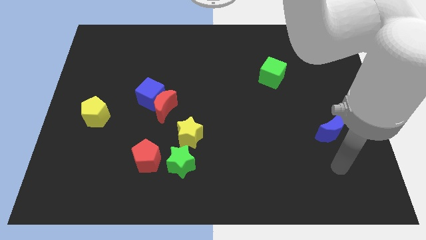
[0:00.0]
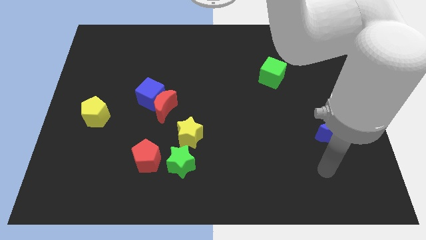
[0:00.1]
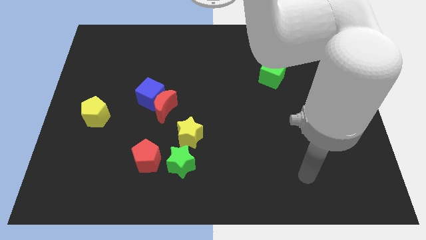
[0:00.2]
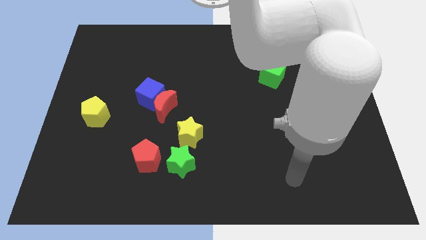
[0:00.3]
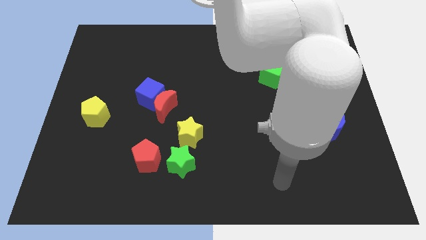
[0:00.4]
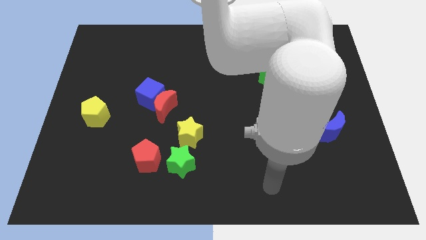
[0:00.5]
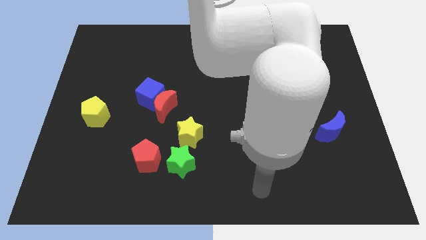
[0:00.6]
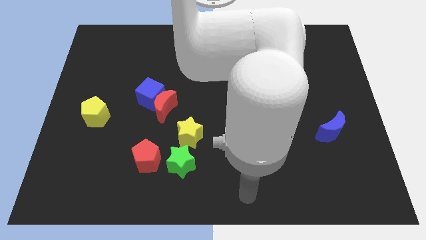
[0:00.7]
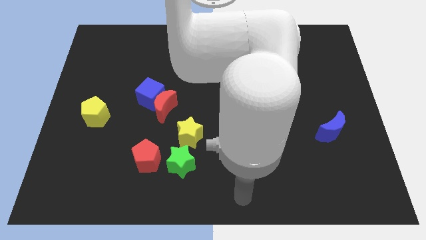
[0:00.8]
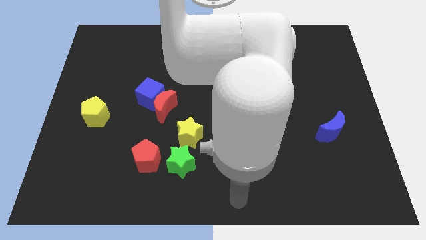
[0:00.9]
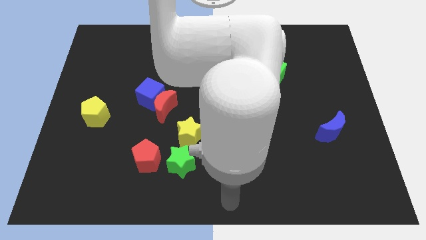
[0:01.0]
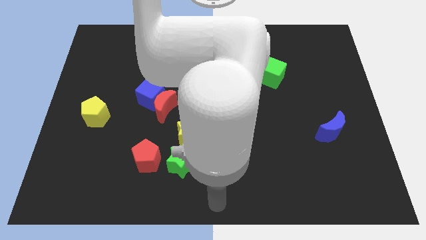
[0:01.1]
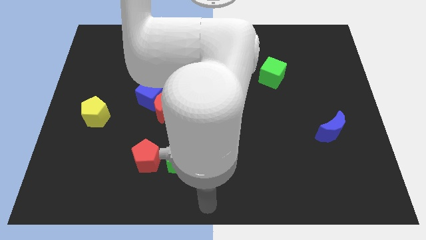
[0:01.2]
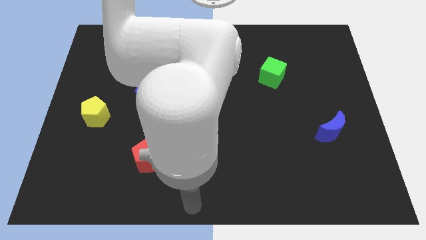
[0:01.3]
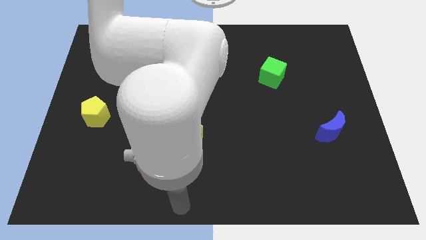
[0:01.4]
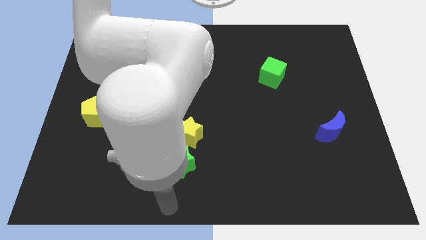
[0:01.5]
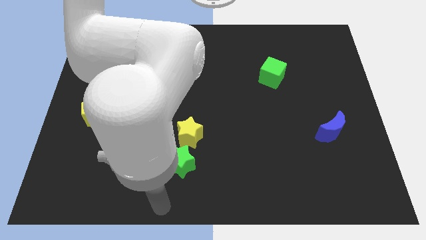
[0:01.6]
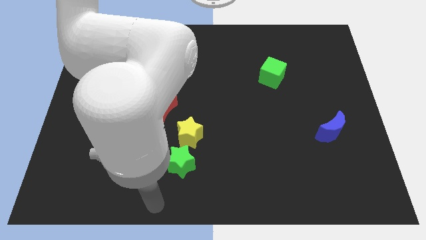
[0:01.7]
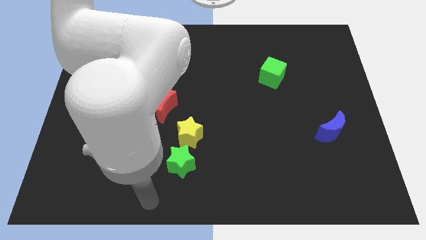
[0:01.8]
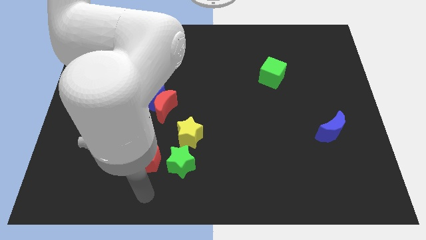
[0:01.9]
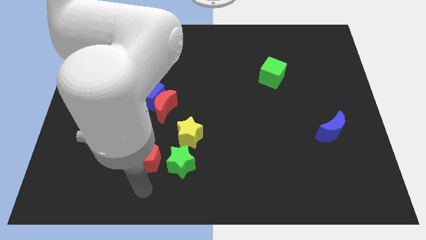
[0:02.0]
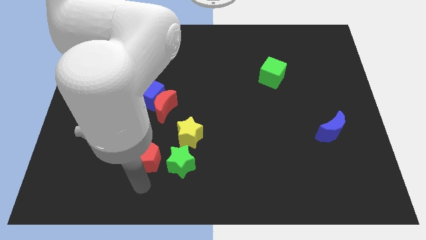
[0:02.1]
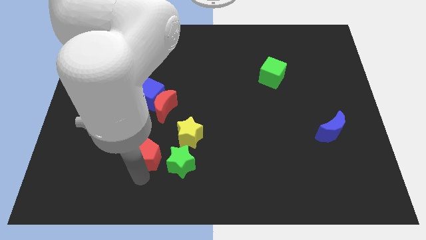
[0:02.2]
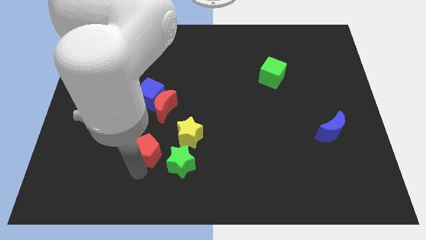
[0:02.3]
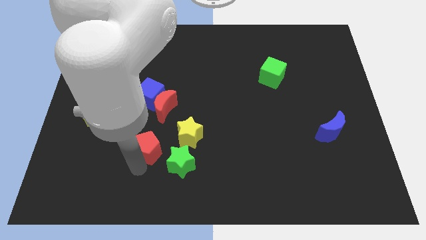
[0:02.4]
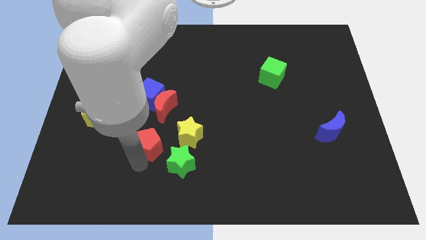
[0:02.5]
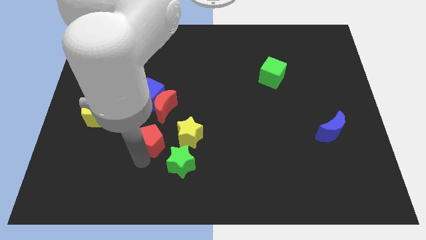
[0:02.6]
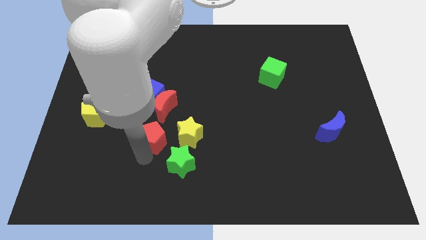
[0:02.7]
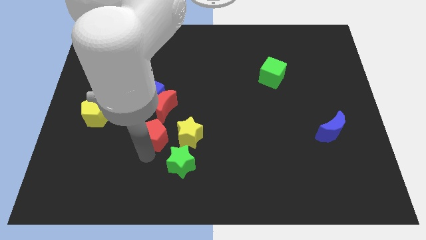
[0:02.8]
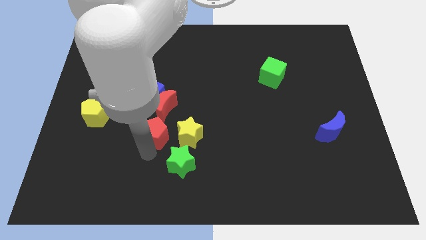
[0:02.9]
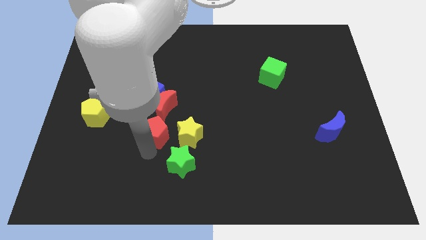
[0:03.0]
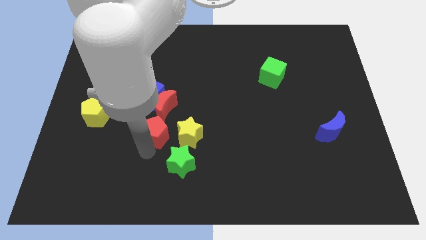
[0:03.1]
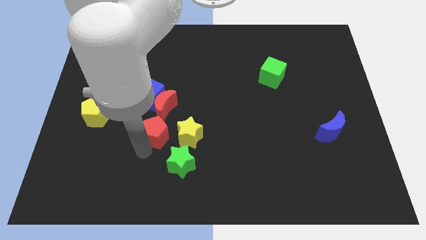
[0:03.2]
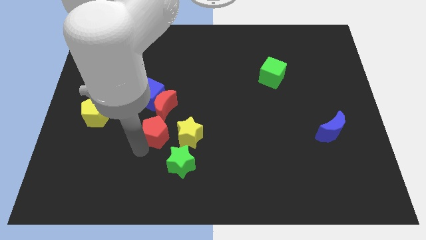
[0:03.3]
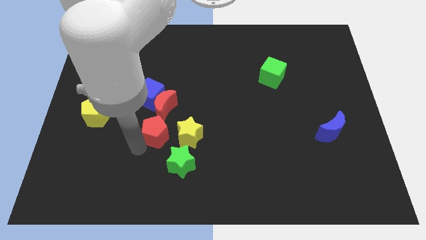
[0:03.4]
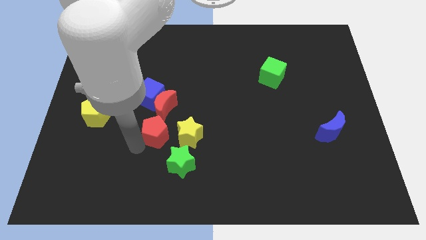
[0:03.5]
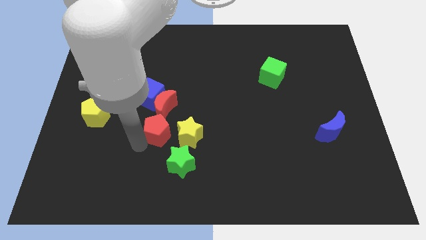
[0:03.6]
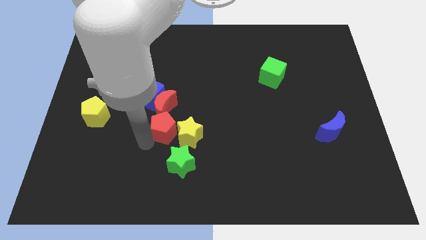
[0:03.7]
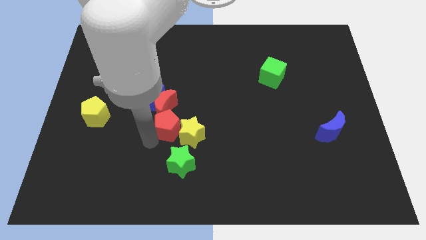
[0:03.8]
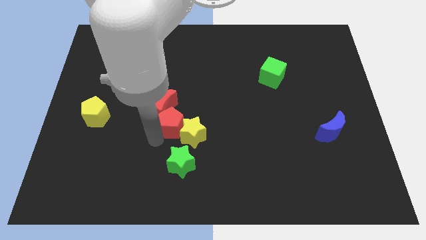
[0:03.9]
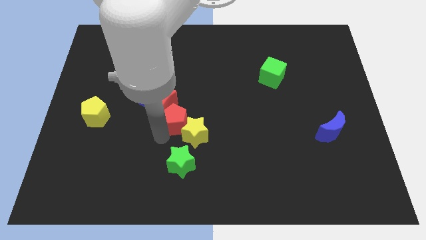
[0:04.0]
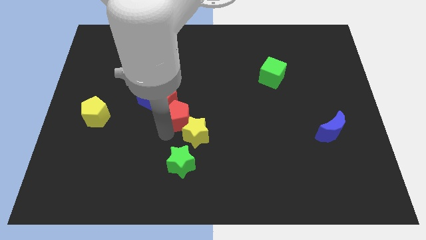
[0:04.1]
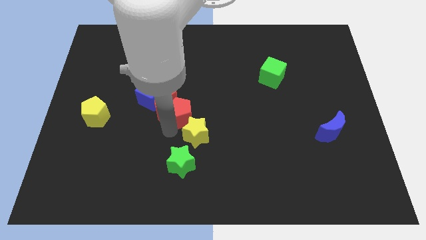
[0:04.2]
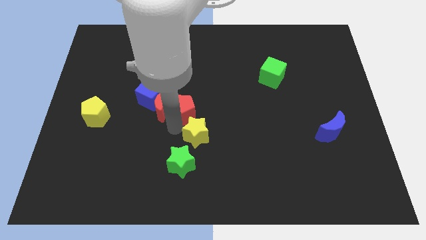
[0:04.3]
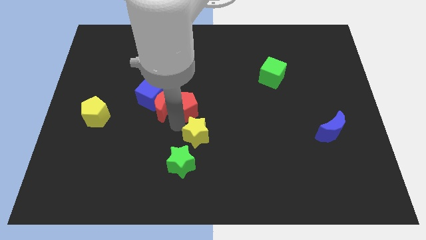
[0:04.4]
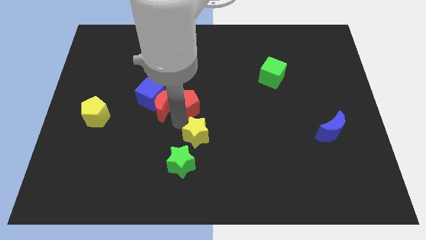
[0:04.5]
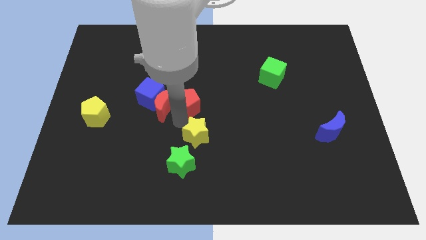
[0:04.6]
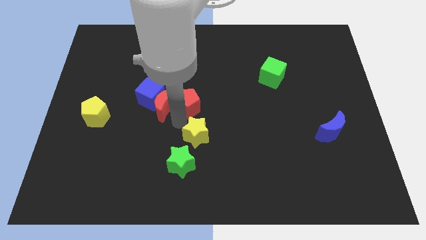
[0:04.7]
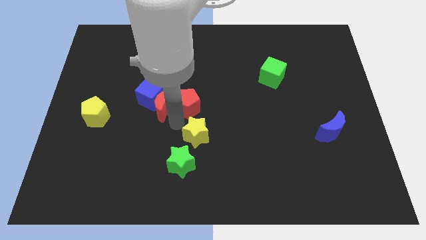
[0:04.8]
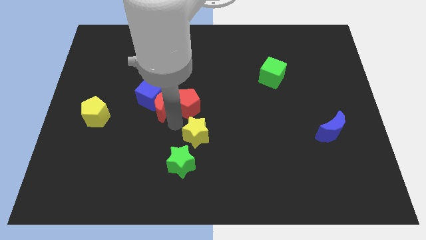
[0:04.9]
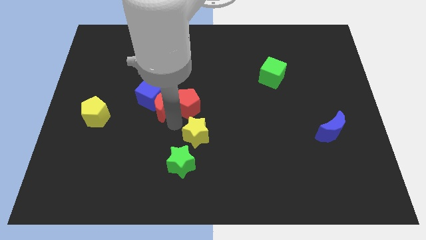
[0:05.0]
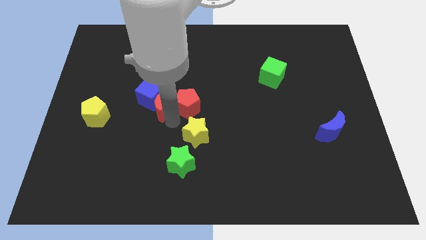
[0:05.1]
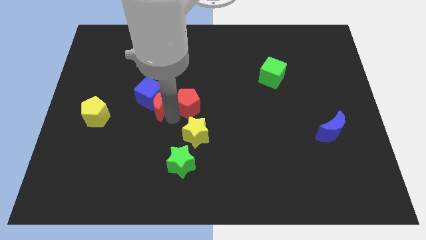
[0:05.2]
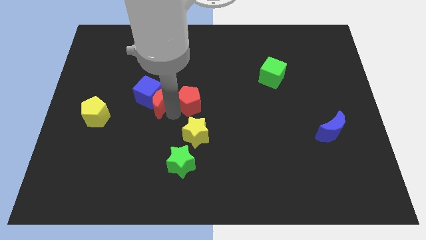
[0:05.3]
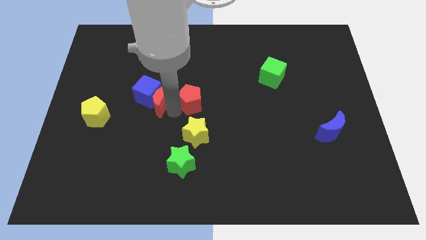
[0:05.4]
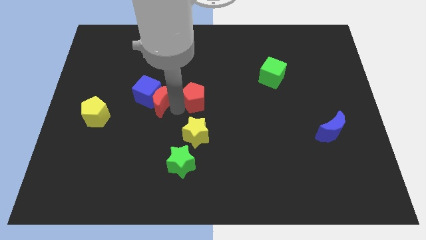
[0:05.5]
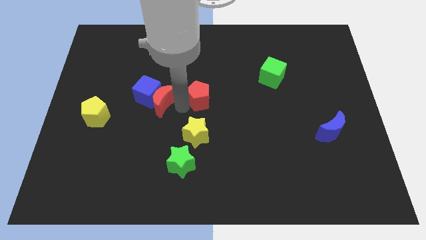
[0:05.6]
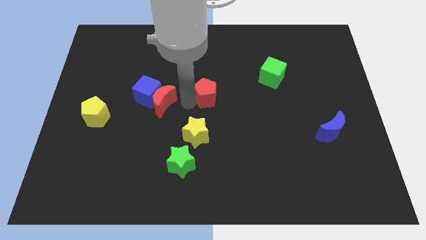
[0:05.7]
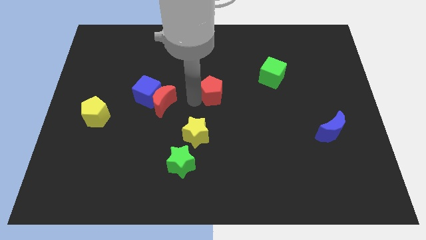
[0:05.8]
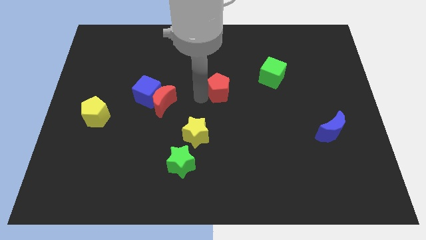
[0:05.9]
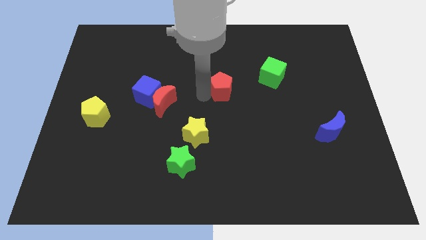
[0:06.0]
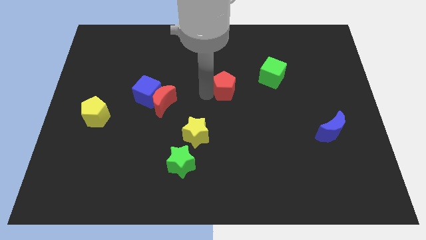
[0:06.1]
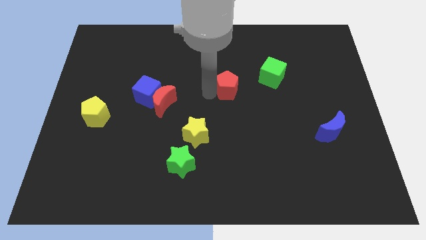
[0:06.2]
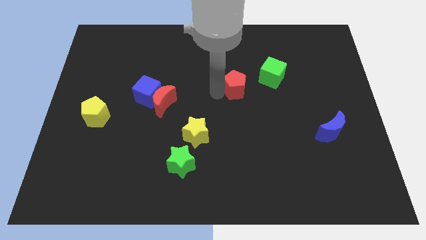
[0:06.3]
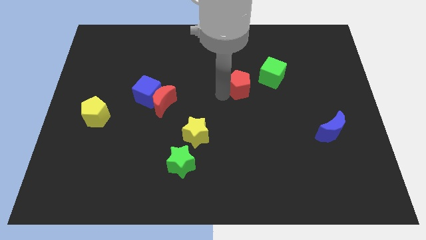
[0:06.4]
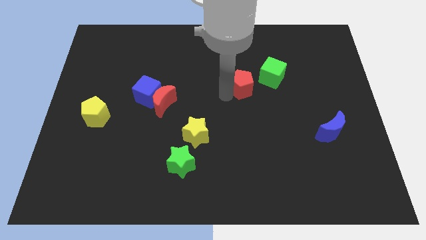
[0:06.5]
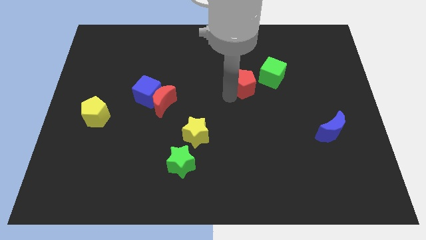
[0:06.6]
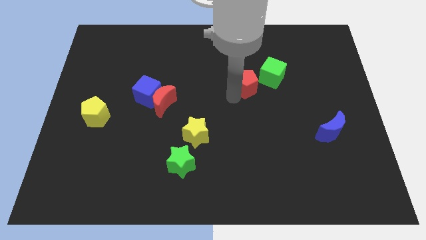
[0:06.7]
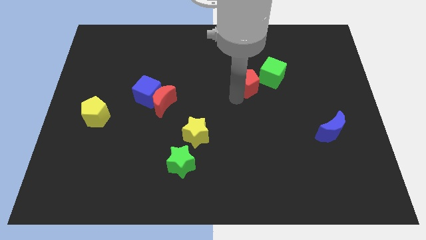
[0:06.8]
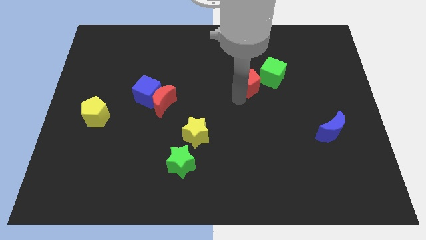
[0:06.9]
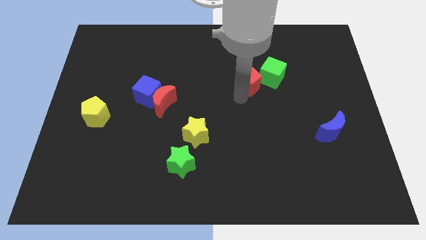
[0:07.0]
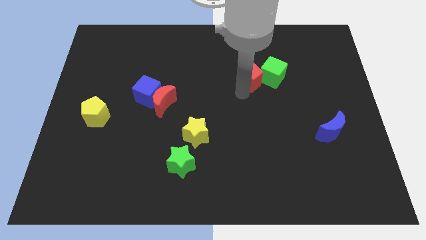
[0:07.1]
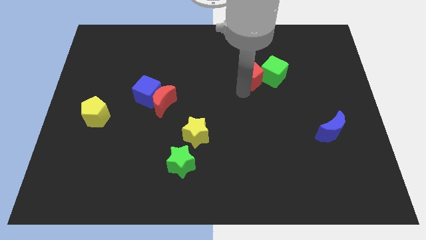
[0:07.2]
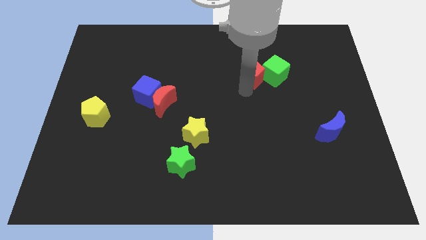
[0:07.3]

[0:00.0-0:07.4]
move the red pentagon next to the green cube

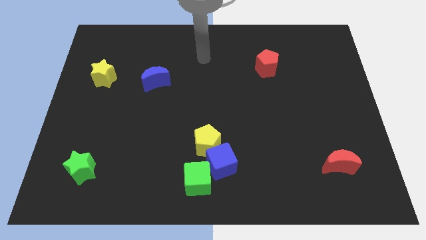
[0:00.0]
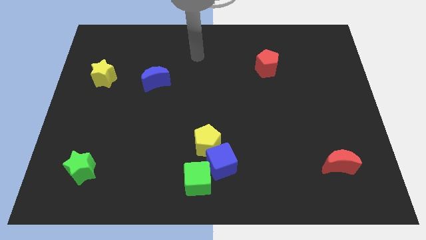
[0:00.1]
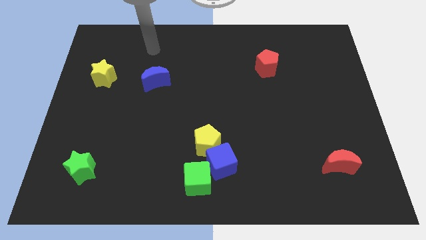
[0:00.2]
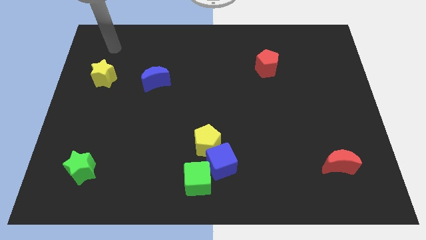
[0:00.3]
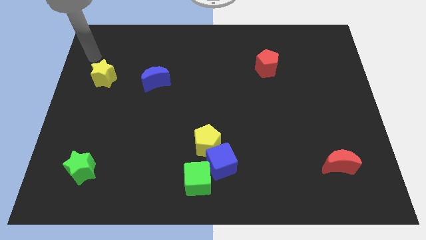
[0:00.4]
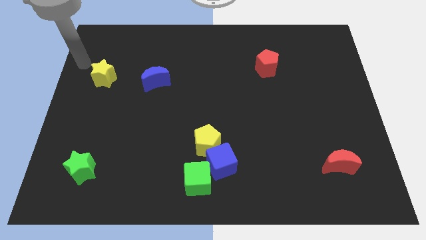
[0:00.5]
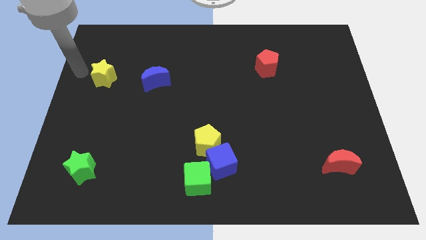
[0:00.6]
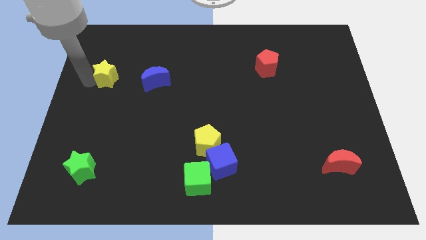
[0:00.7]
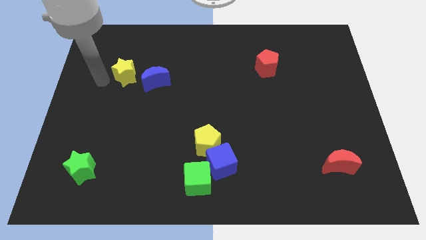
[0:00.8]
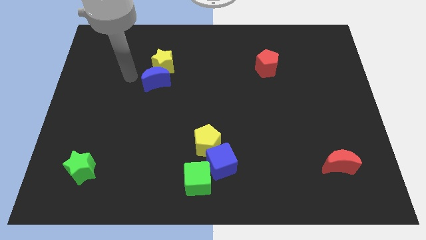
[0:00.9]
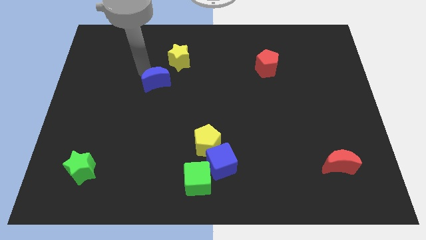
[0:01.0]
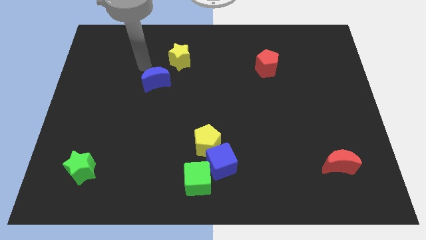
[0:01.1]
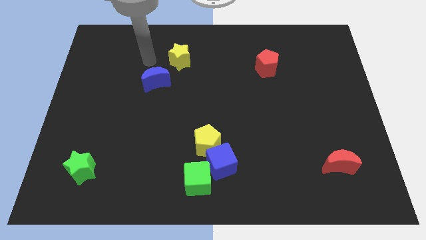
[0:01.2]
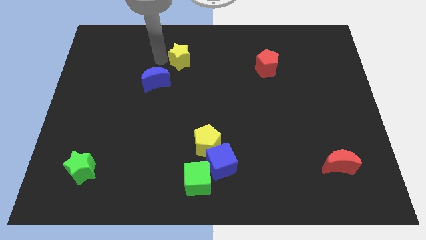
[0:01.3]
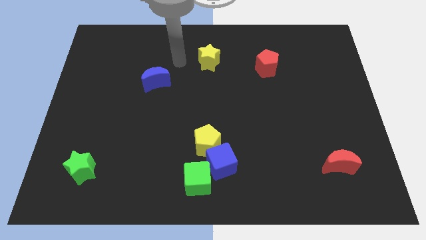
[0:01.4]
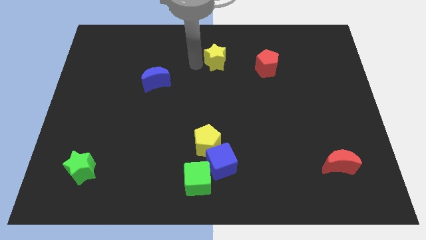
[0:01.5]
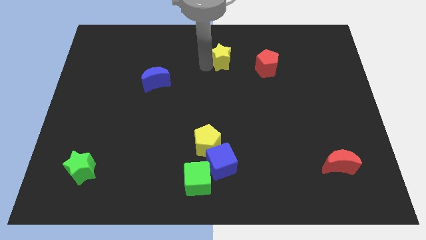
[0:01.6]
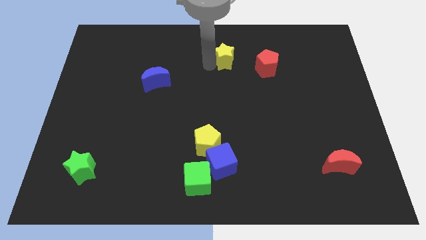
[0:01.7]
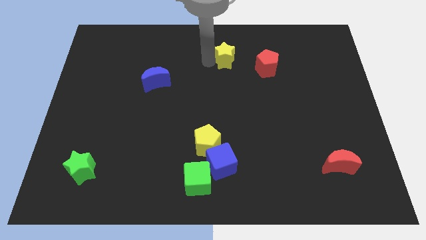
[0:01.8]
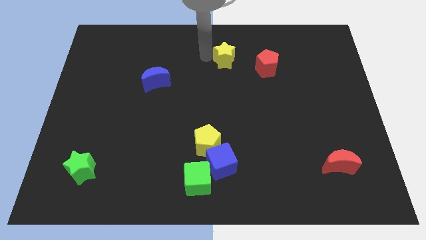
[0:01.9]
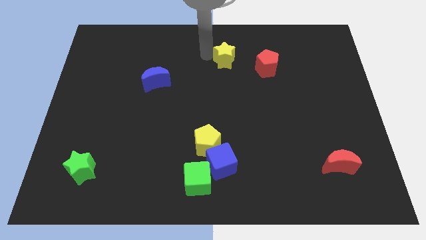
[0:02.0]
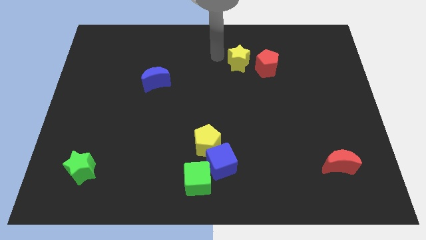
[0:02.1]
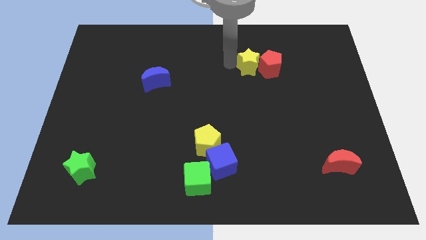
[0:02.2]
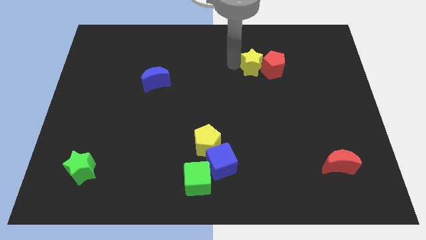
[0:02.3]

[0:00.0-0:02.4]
put the yellow star next to the red pentagon
